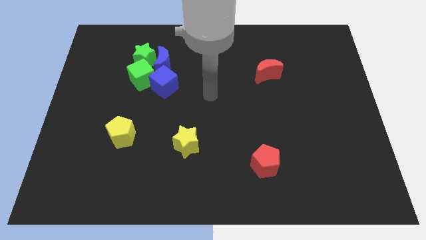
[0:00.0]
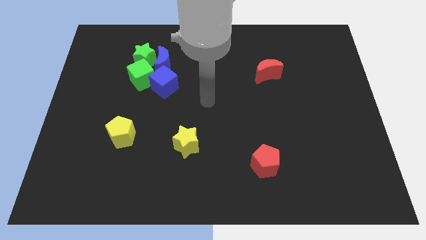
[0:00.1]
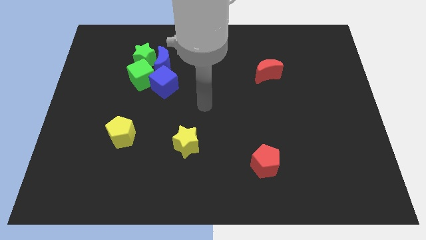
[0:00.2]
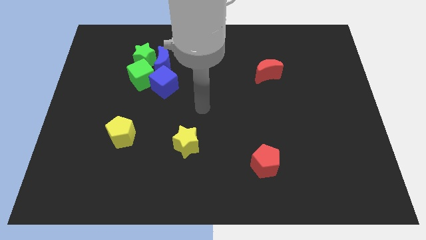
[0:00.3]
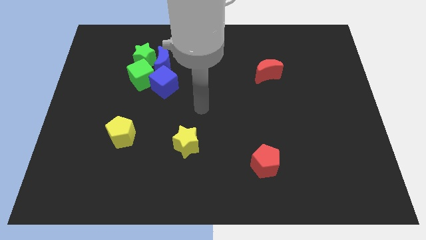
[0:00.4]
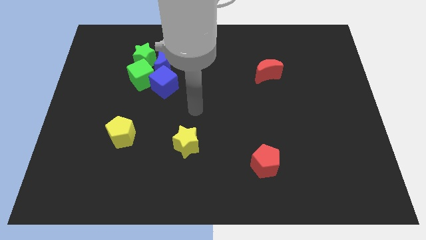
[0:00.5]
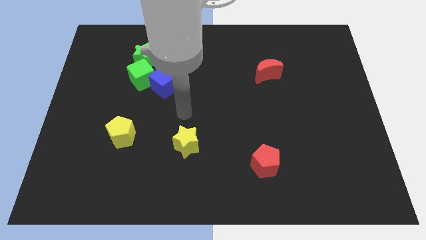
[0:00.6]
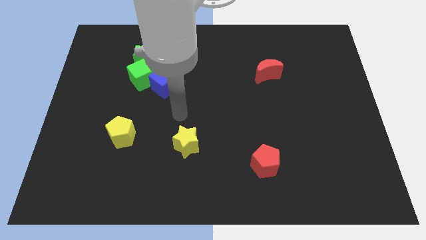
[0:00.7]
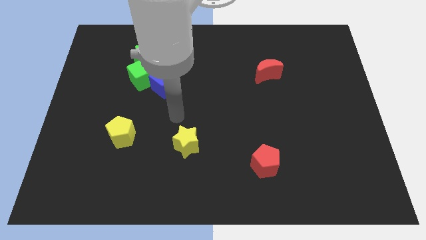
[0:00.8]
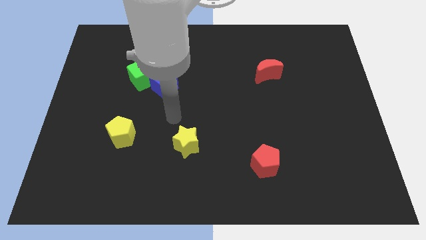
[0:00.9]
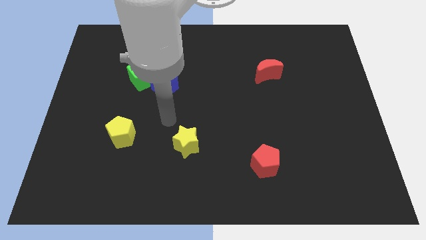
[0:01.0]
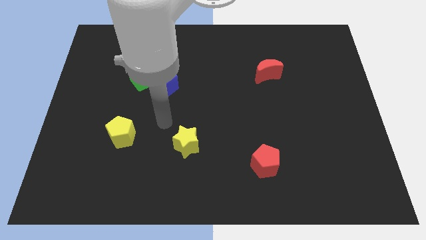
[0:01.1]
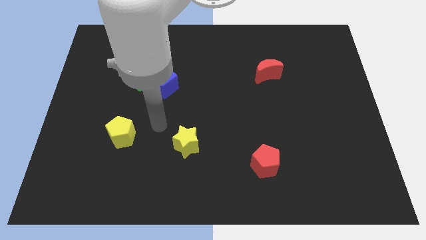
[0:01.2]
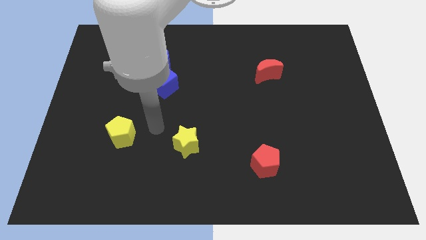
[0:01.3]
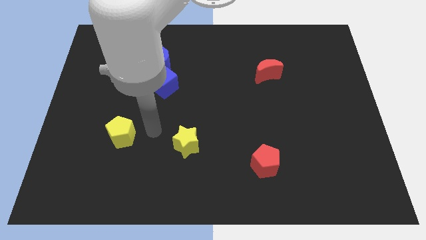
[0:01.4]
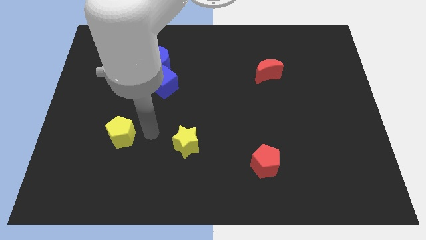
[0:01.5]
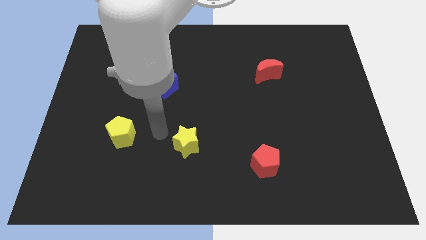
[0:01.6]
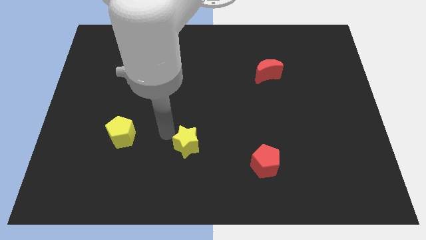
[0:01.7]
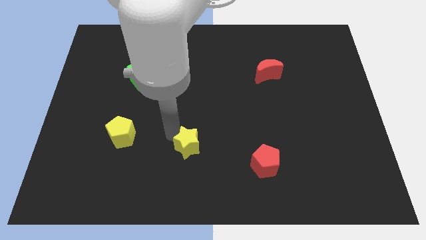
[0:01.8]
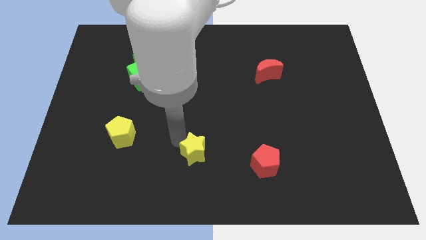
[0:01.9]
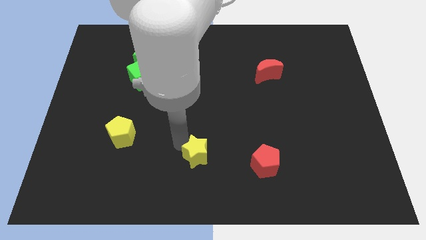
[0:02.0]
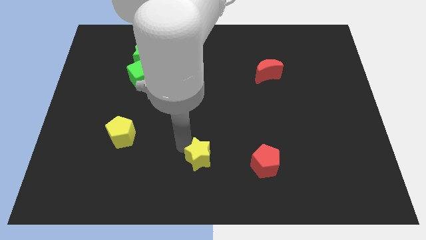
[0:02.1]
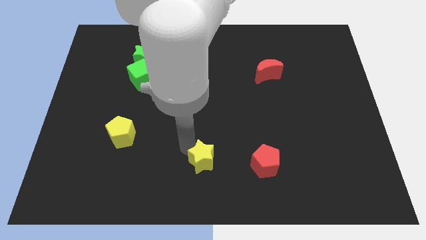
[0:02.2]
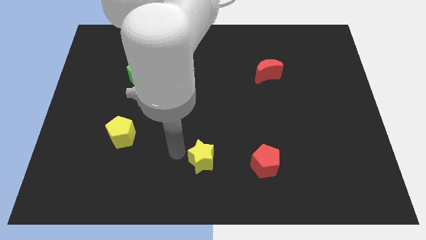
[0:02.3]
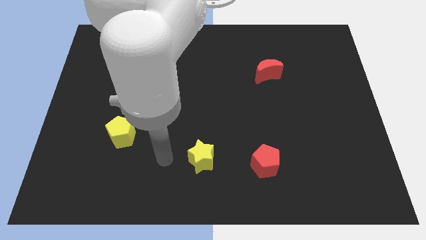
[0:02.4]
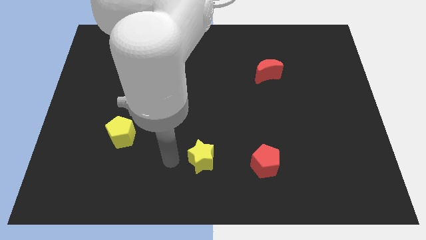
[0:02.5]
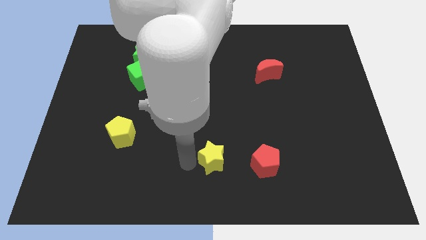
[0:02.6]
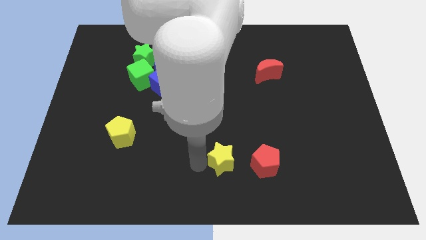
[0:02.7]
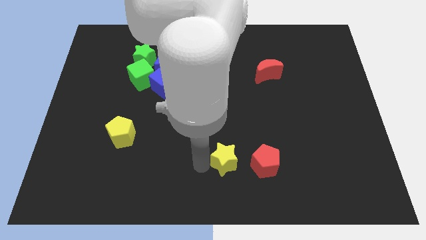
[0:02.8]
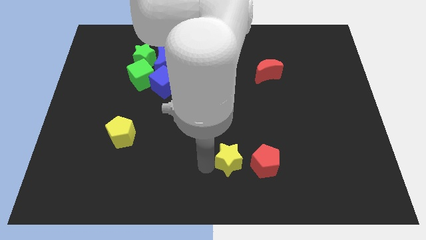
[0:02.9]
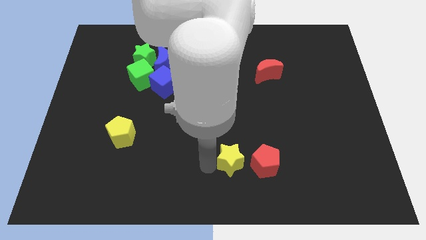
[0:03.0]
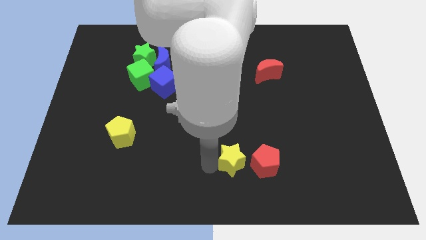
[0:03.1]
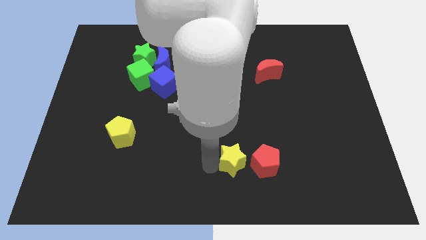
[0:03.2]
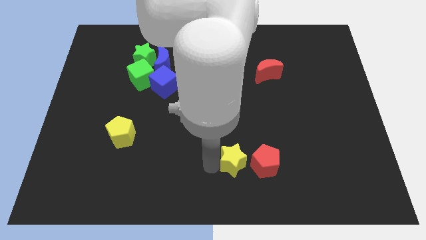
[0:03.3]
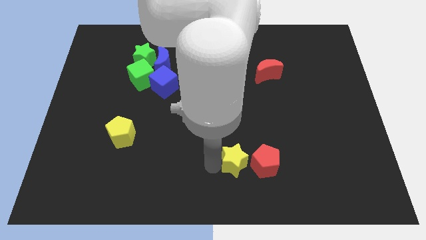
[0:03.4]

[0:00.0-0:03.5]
move yellow star left to the red pentagon

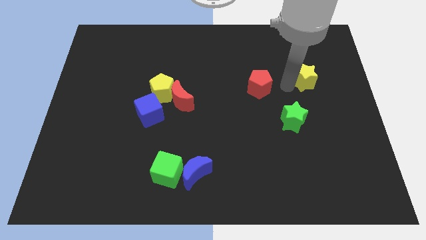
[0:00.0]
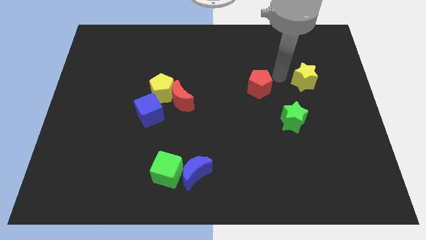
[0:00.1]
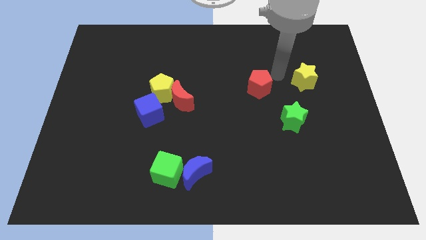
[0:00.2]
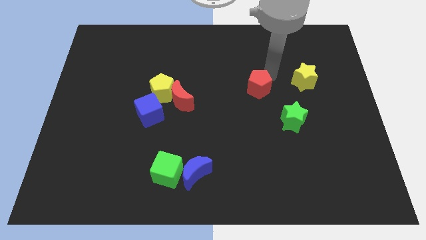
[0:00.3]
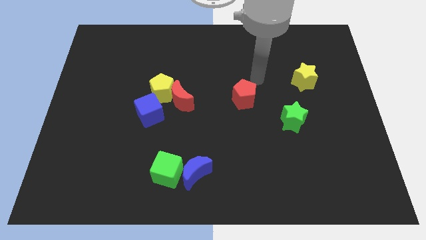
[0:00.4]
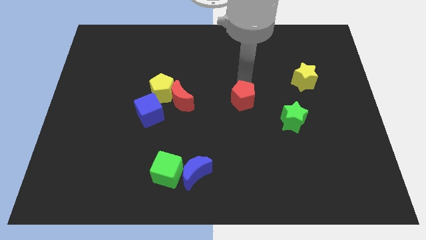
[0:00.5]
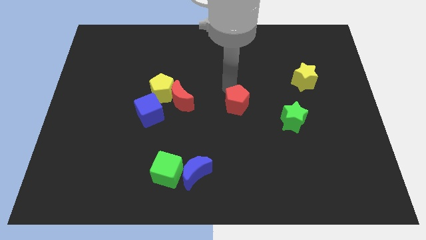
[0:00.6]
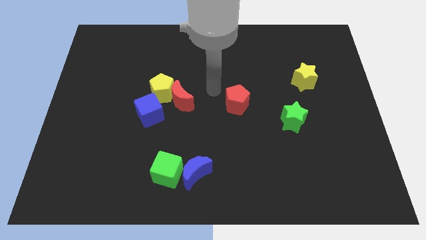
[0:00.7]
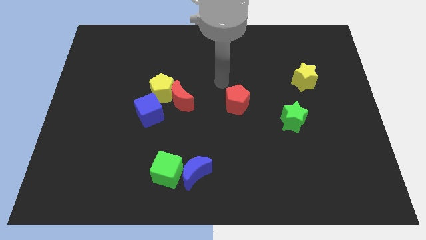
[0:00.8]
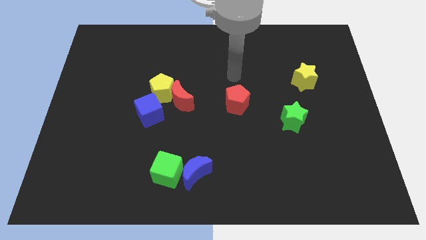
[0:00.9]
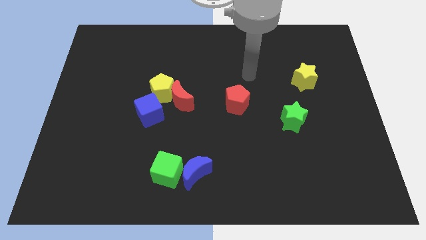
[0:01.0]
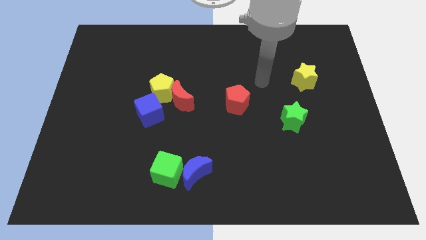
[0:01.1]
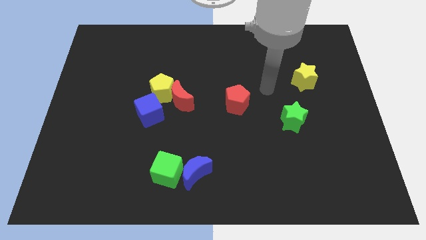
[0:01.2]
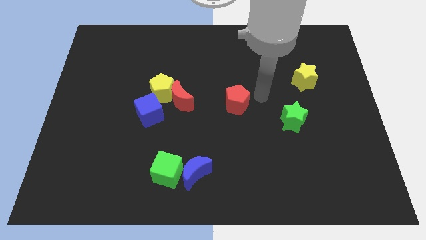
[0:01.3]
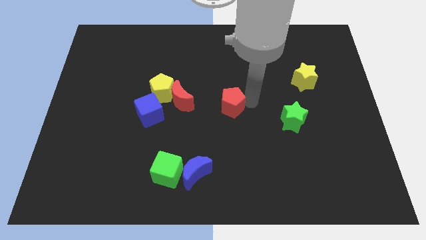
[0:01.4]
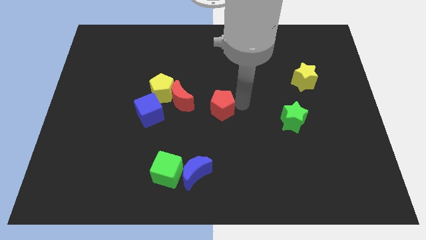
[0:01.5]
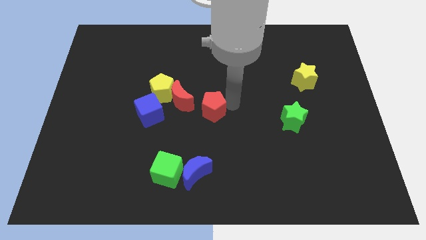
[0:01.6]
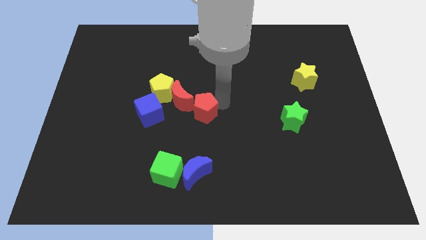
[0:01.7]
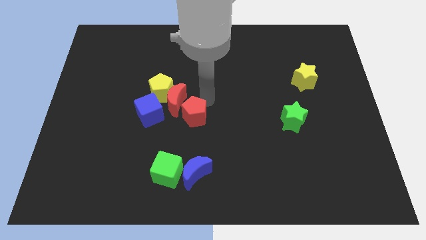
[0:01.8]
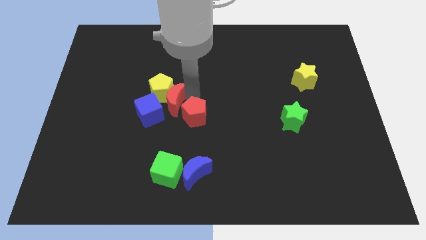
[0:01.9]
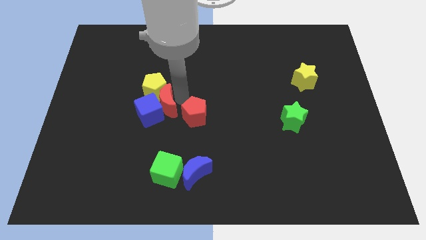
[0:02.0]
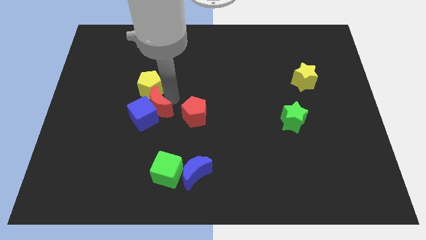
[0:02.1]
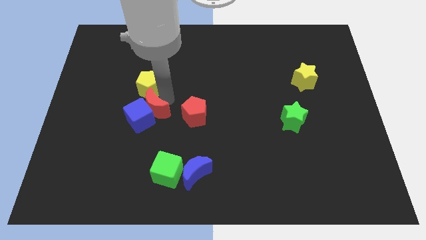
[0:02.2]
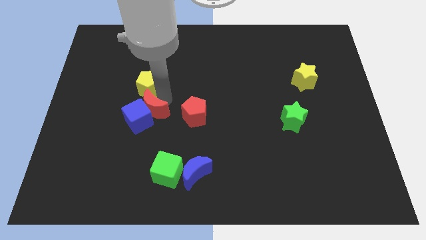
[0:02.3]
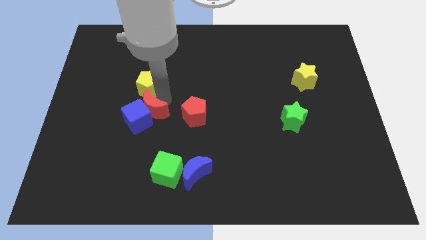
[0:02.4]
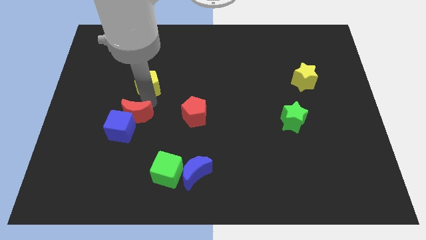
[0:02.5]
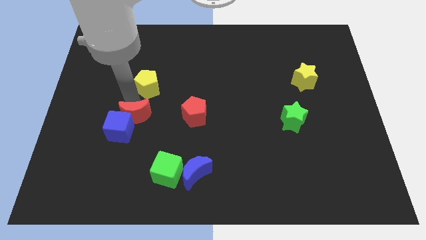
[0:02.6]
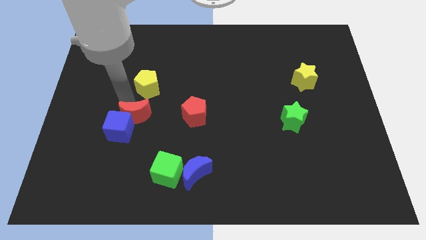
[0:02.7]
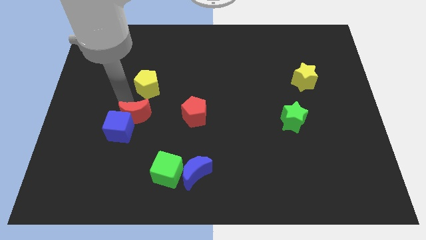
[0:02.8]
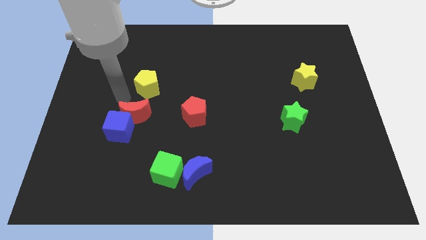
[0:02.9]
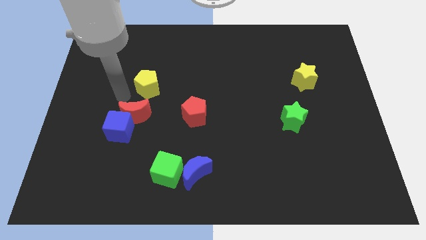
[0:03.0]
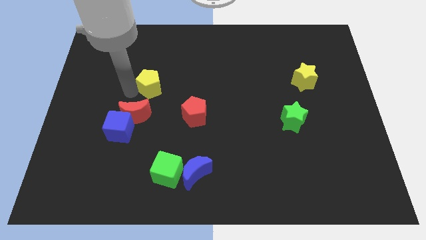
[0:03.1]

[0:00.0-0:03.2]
move the red pentagon and the red moon parallel to each other

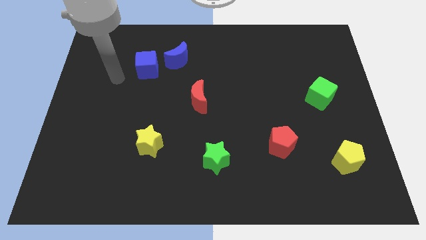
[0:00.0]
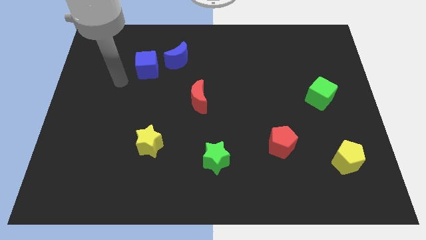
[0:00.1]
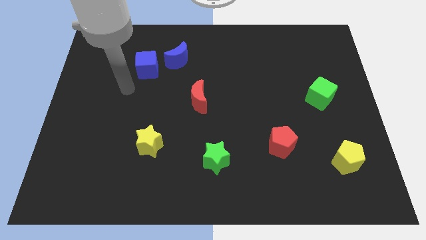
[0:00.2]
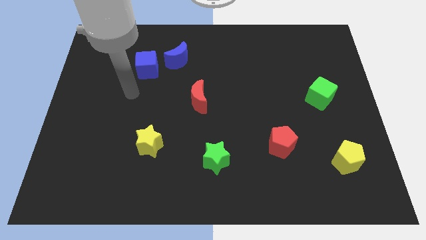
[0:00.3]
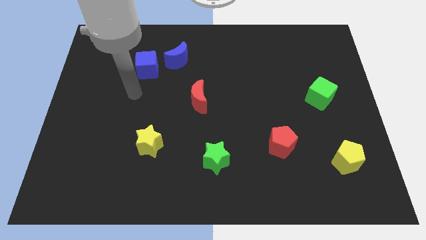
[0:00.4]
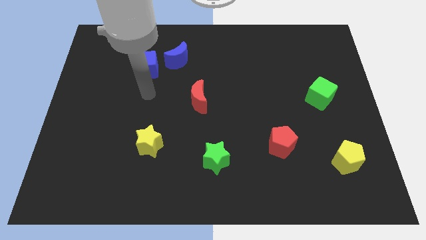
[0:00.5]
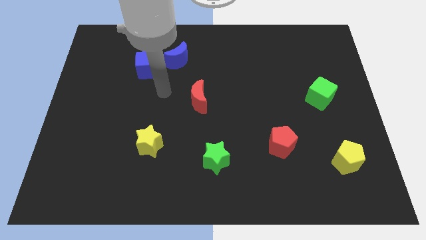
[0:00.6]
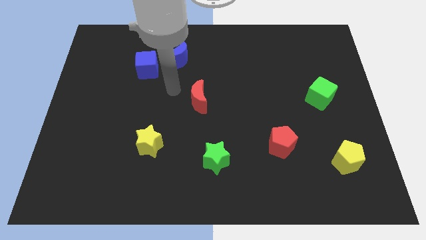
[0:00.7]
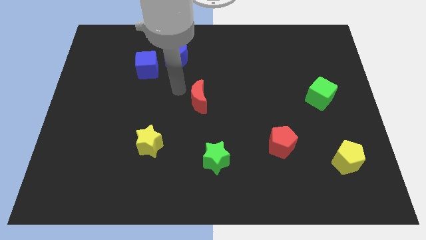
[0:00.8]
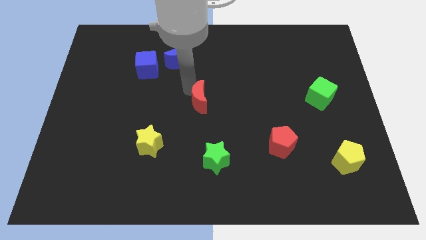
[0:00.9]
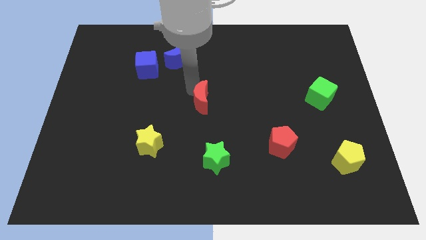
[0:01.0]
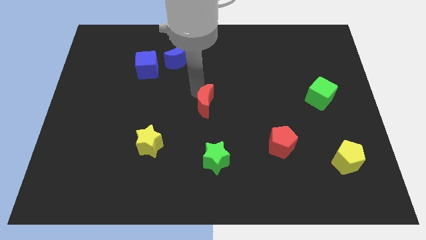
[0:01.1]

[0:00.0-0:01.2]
touch the red crescent on the left

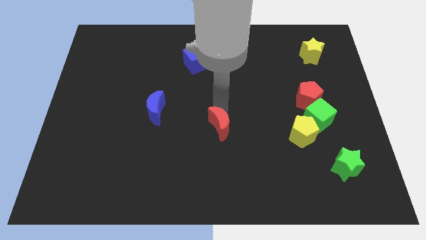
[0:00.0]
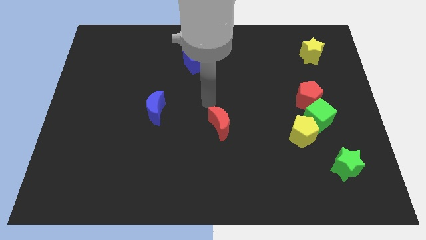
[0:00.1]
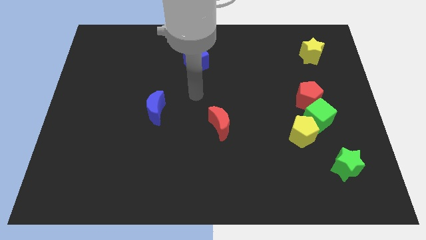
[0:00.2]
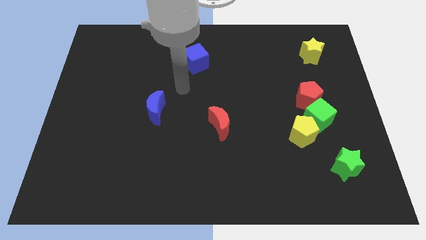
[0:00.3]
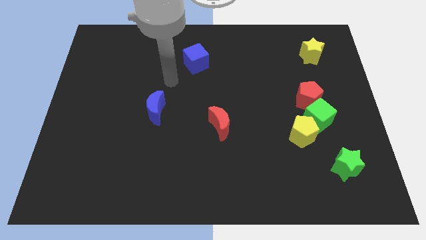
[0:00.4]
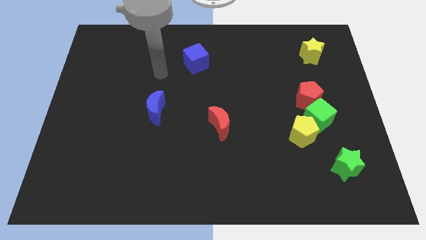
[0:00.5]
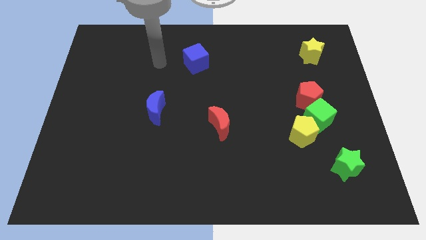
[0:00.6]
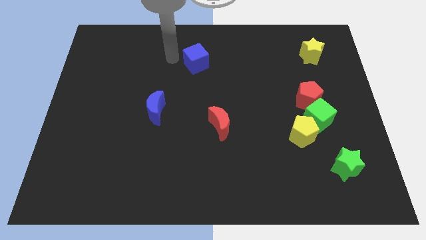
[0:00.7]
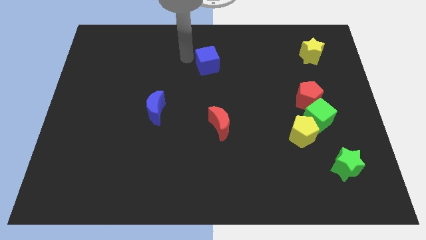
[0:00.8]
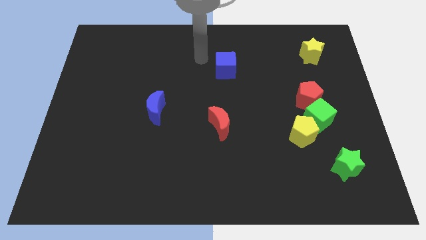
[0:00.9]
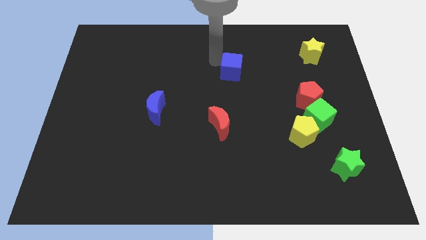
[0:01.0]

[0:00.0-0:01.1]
place the blue cube above the red moon

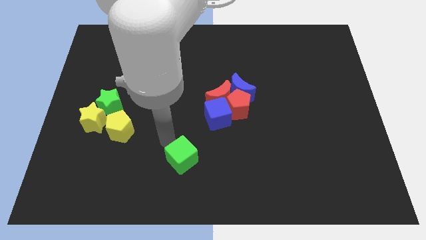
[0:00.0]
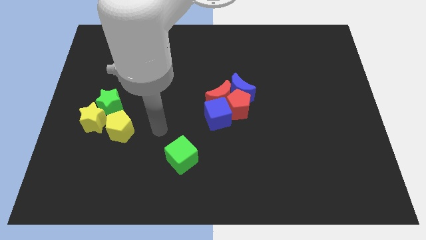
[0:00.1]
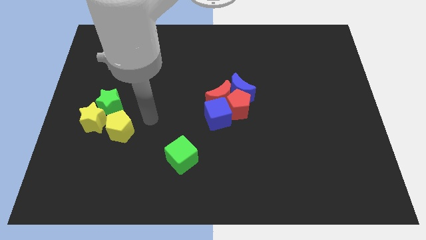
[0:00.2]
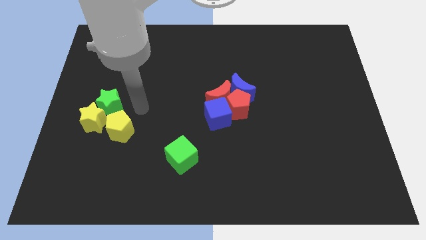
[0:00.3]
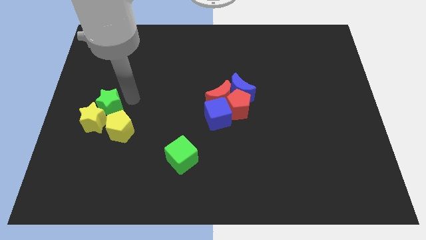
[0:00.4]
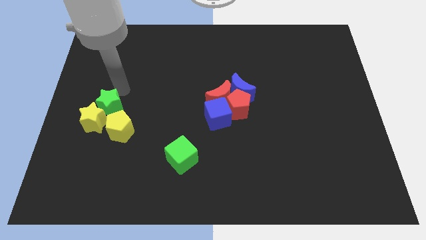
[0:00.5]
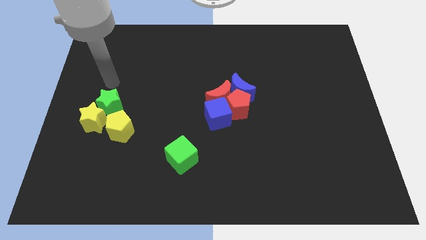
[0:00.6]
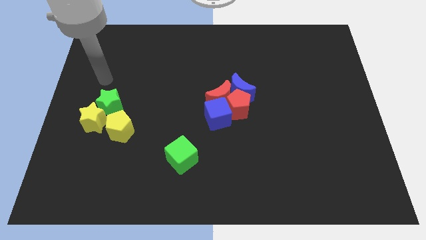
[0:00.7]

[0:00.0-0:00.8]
push your hand at the top side of the green star
